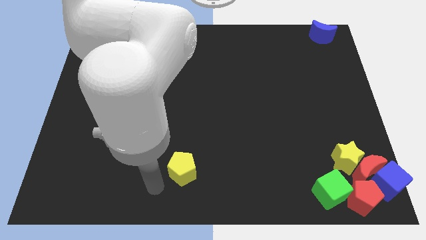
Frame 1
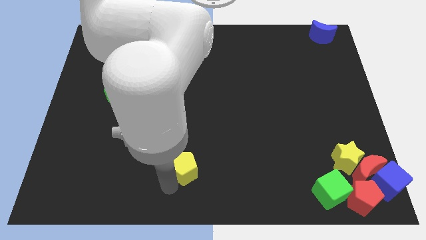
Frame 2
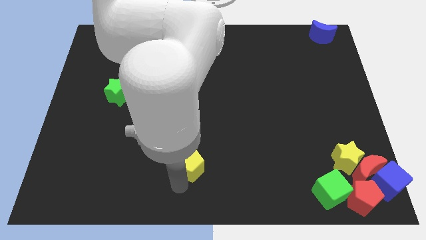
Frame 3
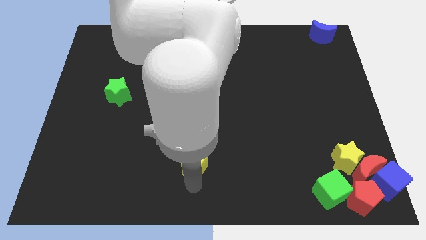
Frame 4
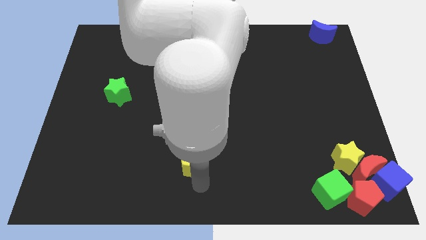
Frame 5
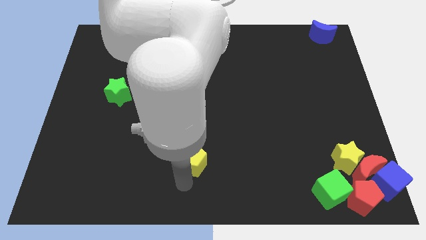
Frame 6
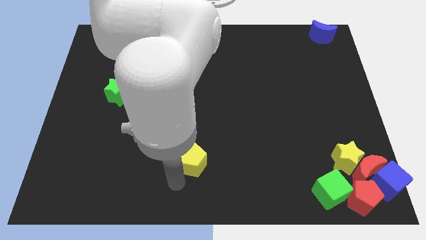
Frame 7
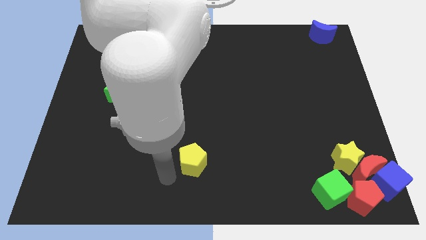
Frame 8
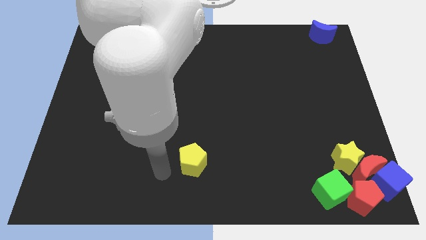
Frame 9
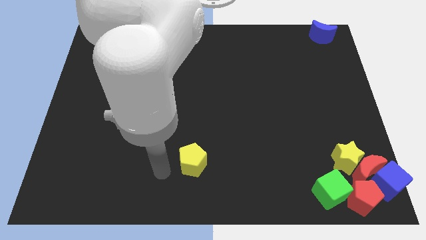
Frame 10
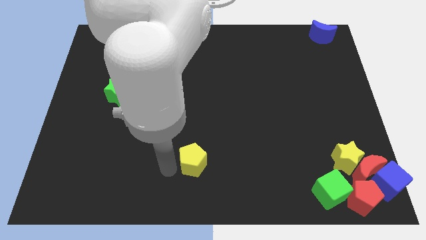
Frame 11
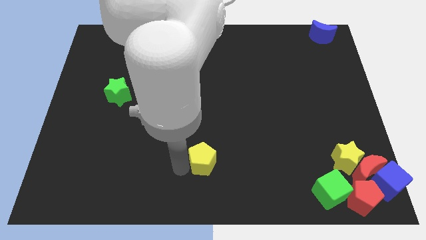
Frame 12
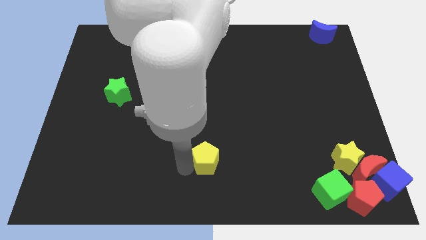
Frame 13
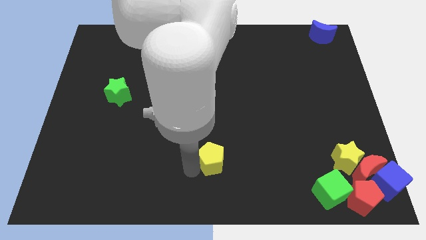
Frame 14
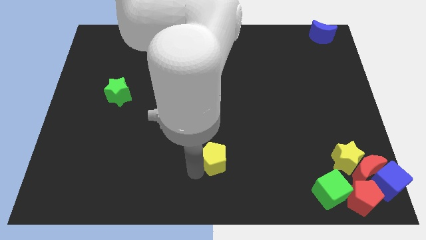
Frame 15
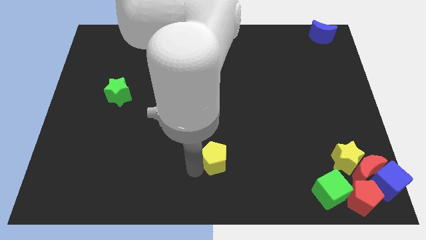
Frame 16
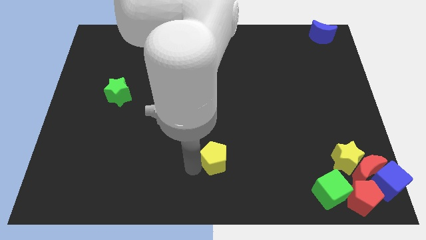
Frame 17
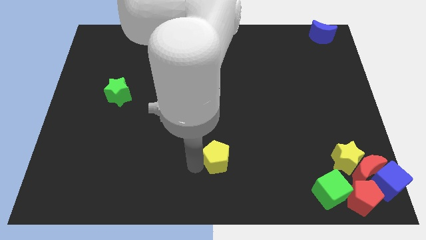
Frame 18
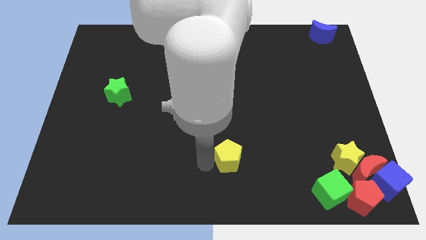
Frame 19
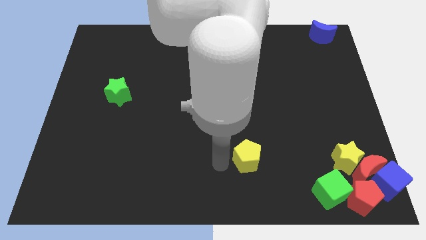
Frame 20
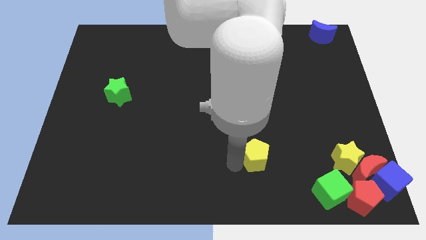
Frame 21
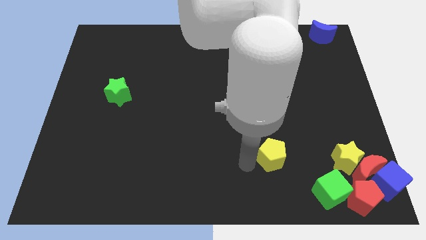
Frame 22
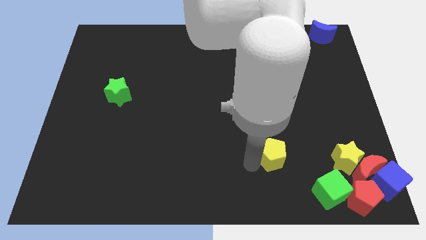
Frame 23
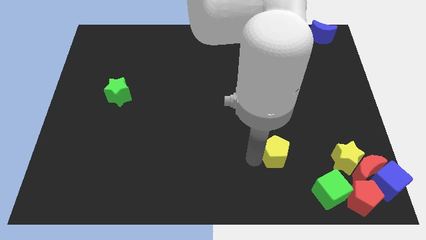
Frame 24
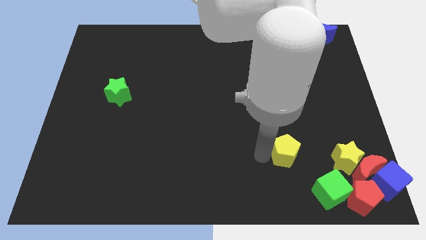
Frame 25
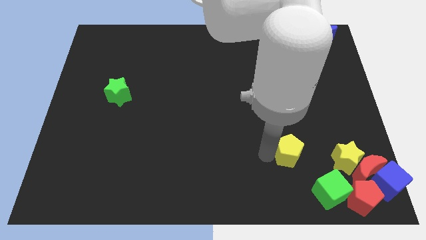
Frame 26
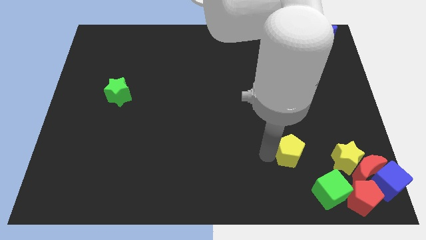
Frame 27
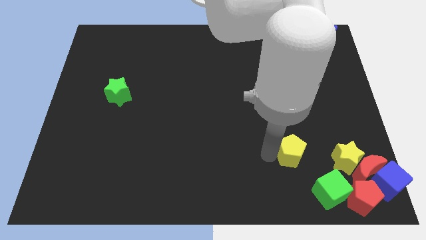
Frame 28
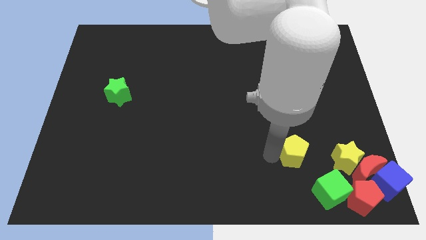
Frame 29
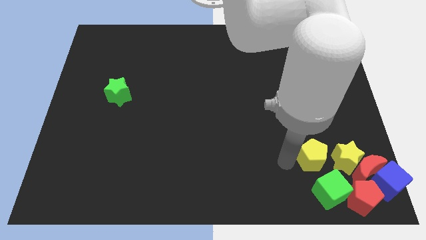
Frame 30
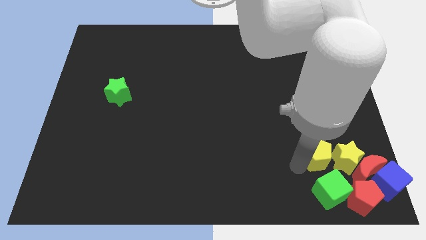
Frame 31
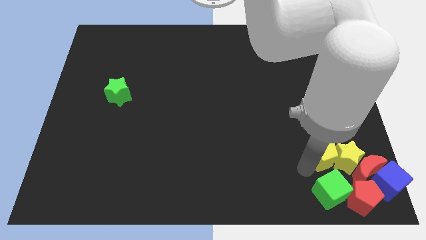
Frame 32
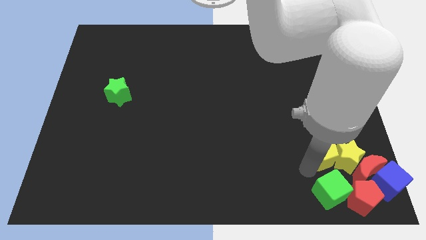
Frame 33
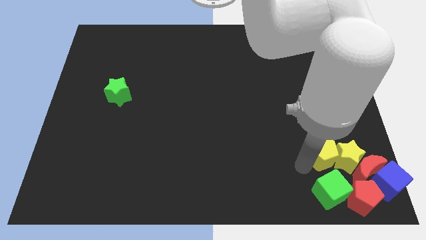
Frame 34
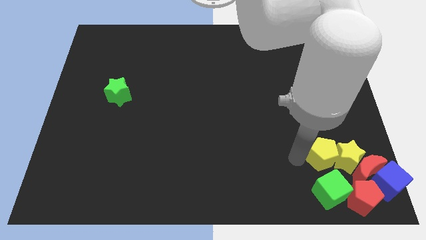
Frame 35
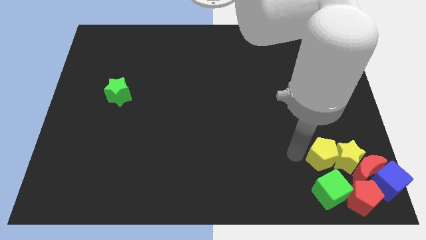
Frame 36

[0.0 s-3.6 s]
slide the yellow pentagon to the left side of the yellow star

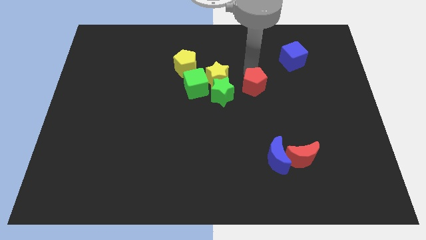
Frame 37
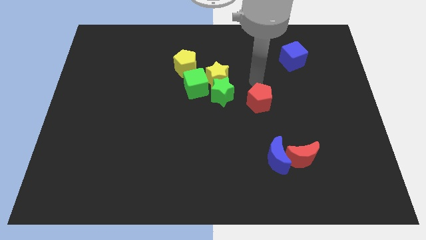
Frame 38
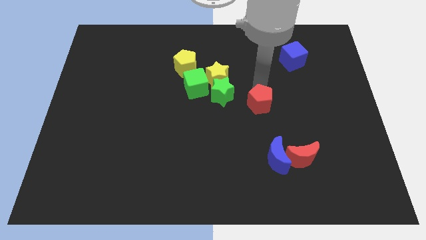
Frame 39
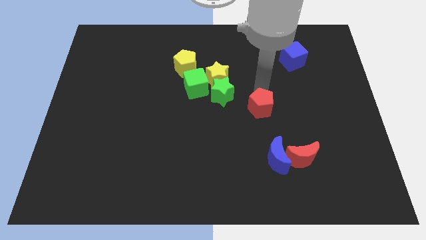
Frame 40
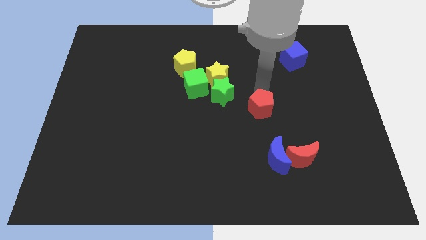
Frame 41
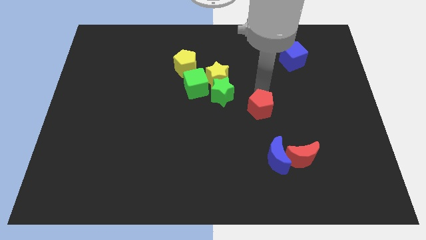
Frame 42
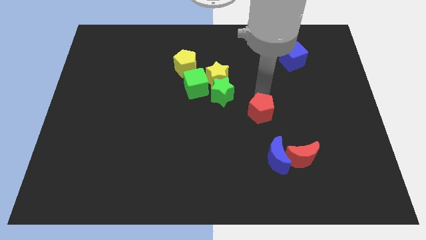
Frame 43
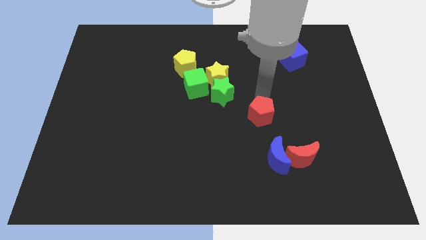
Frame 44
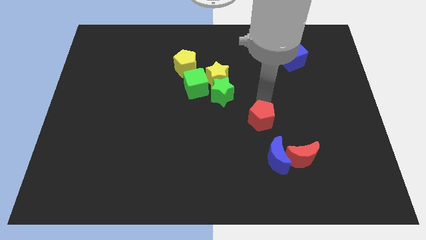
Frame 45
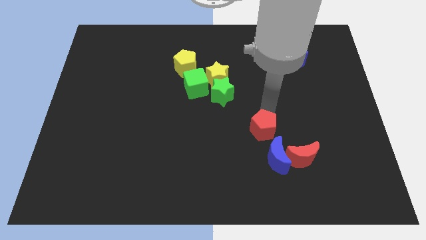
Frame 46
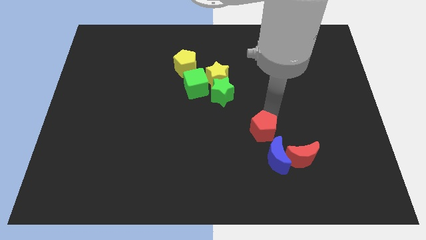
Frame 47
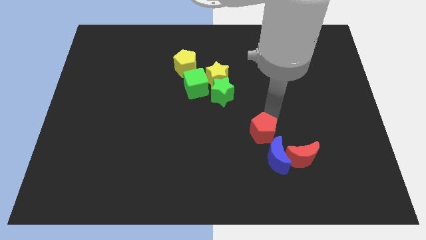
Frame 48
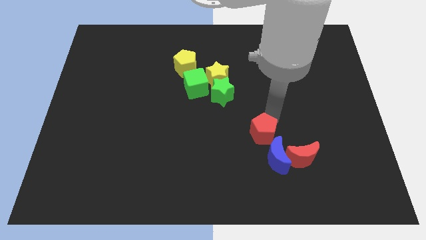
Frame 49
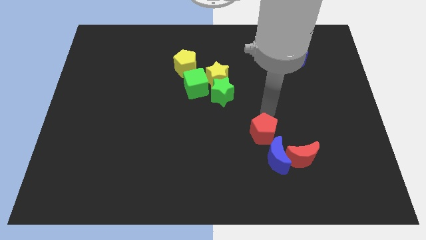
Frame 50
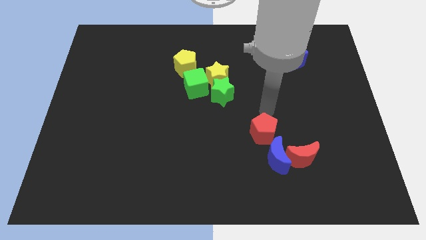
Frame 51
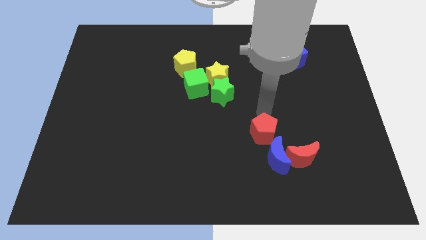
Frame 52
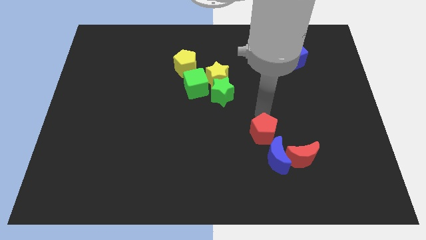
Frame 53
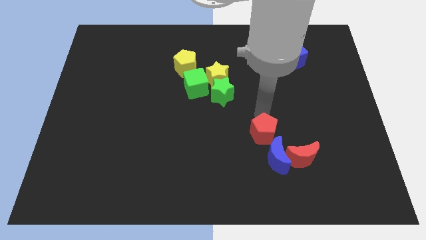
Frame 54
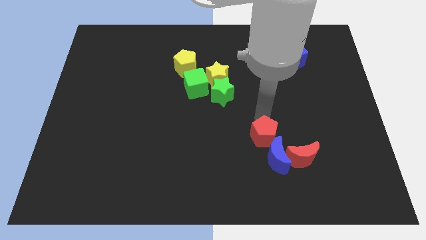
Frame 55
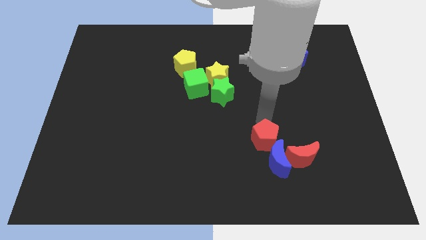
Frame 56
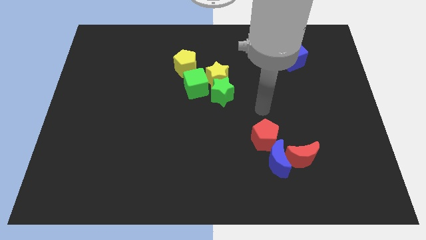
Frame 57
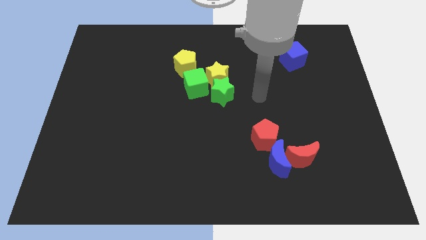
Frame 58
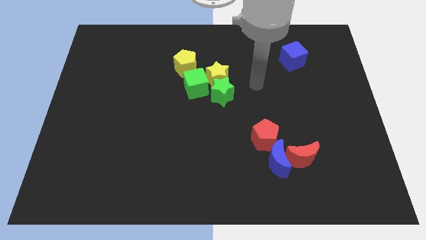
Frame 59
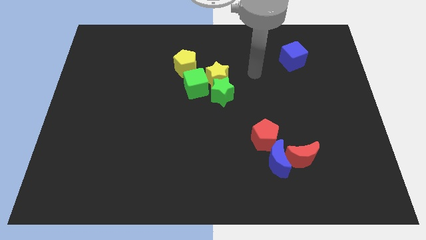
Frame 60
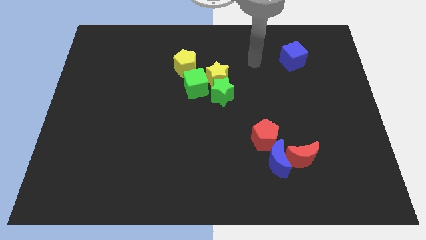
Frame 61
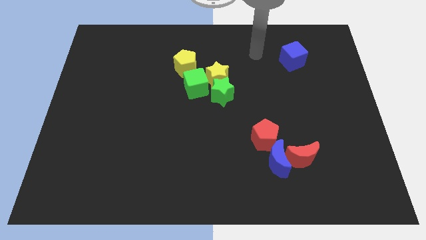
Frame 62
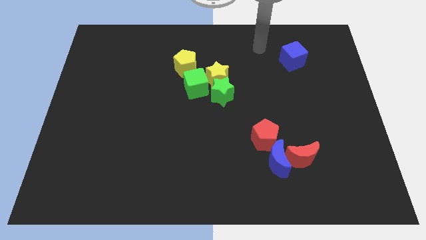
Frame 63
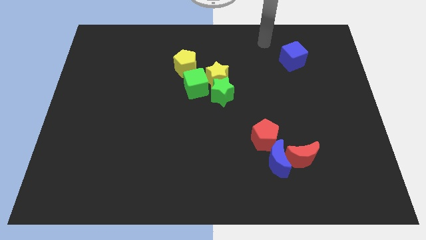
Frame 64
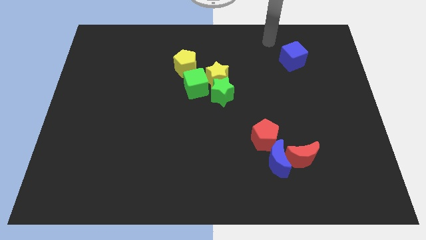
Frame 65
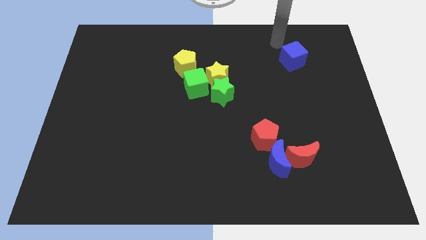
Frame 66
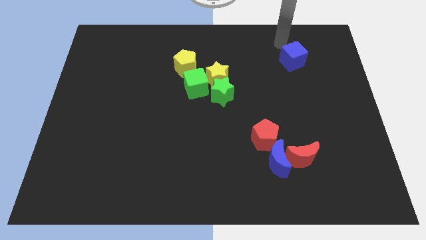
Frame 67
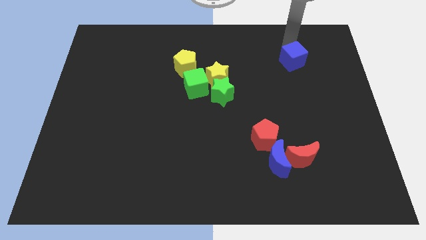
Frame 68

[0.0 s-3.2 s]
push the red pentagon into the blue crescent

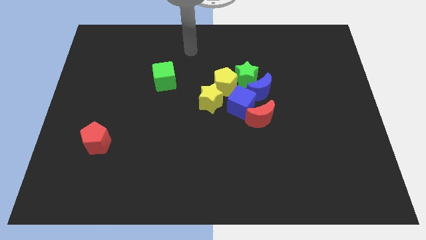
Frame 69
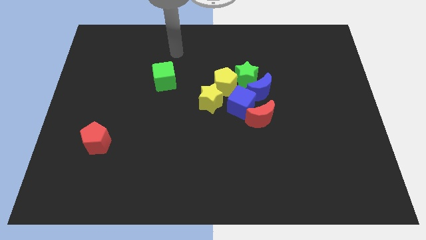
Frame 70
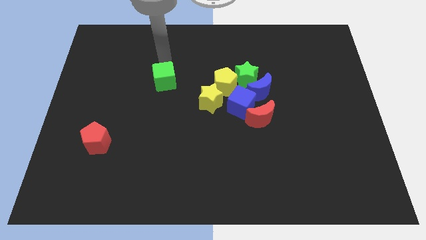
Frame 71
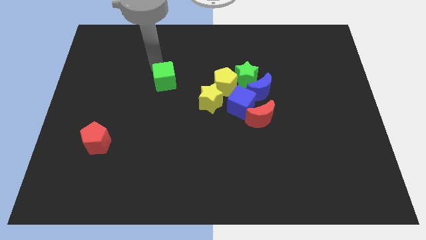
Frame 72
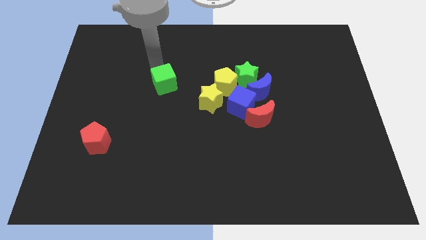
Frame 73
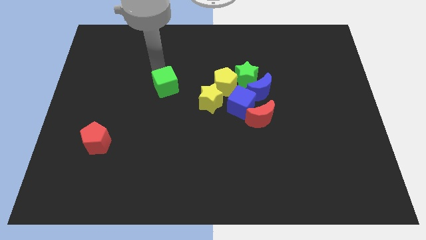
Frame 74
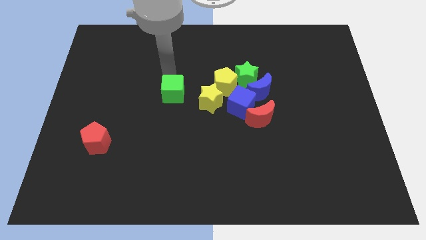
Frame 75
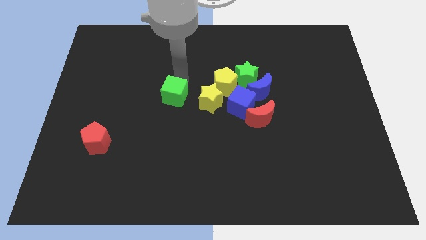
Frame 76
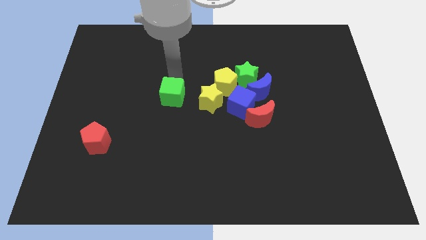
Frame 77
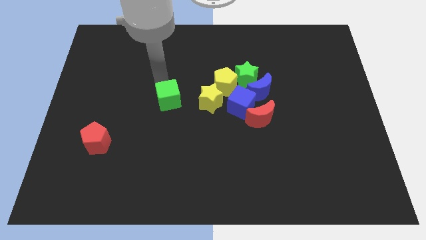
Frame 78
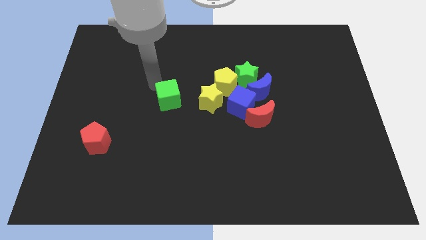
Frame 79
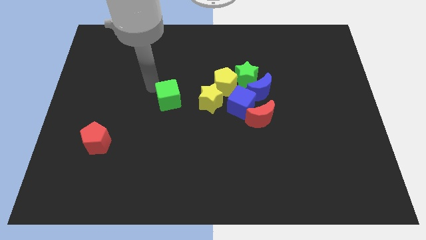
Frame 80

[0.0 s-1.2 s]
push the green cube to the left of the yellow star

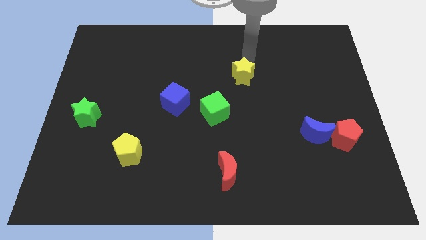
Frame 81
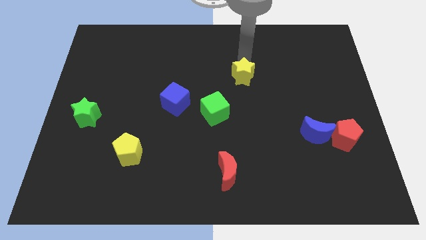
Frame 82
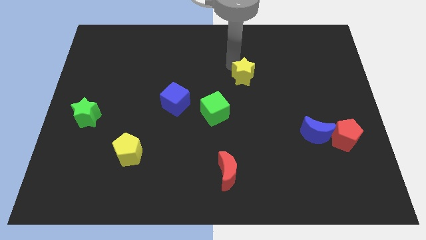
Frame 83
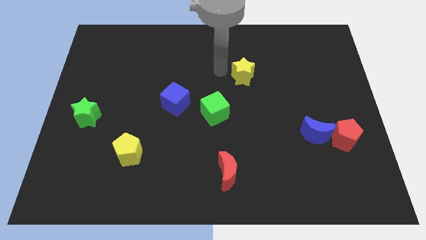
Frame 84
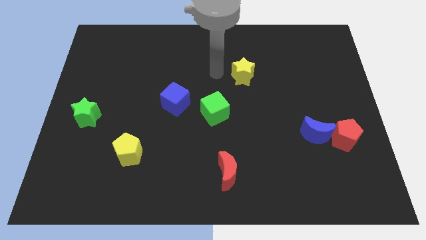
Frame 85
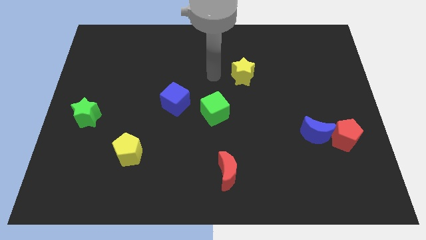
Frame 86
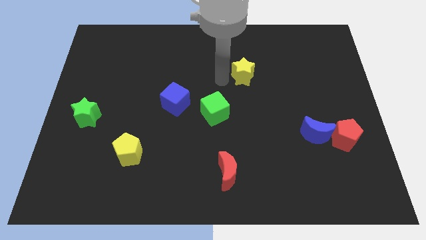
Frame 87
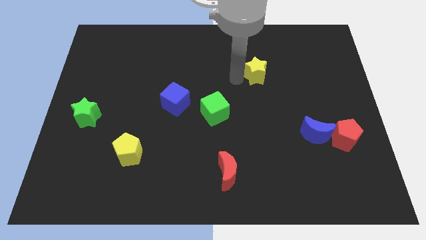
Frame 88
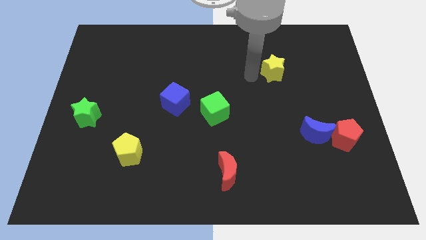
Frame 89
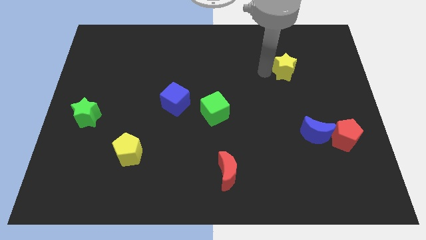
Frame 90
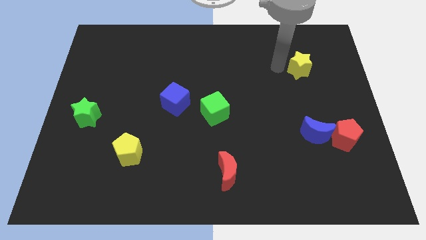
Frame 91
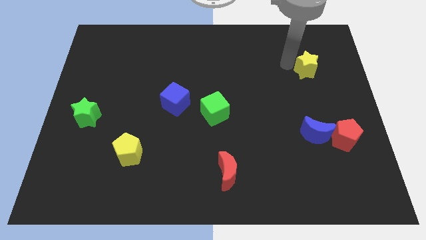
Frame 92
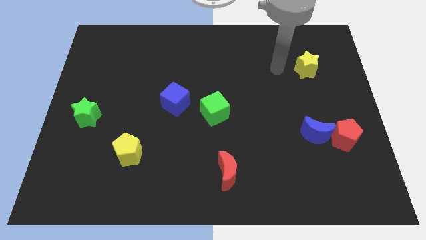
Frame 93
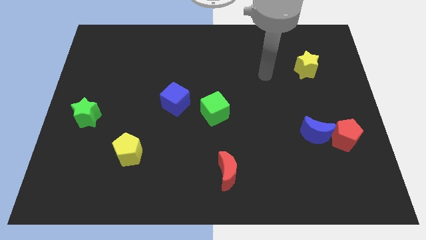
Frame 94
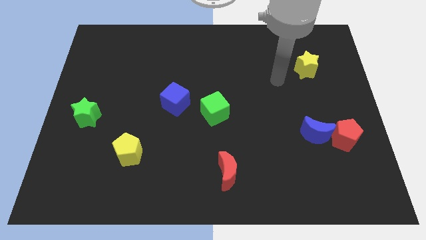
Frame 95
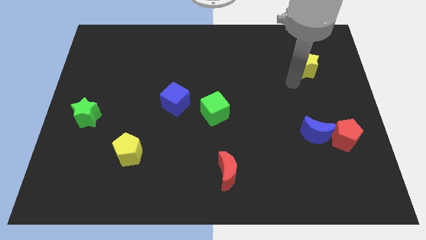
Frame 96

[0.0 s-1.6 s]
push the yellow star towards top right
